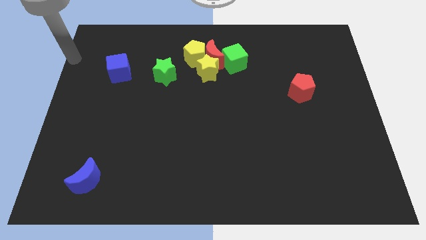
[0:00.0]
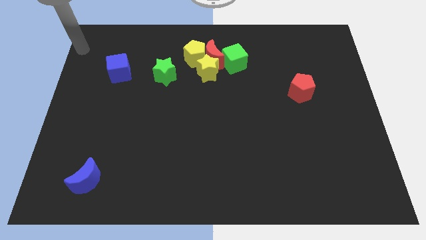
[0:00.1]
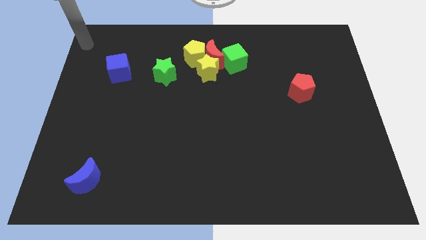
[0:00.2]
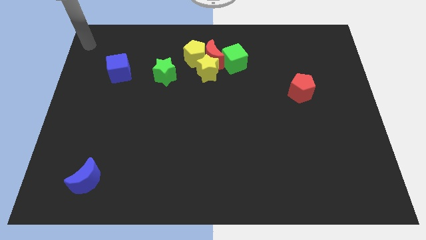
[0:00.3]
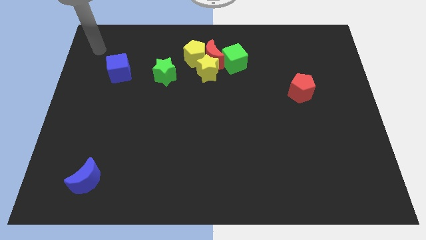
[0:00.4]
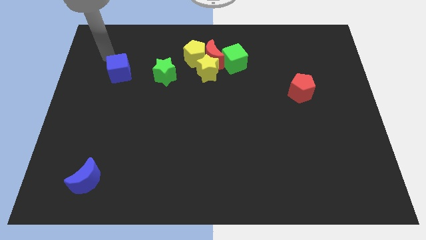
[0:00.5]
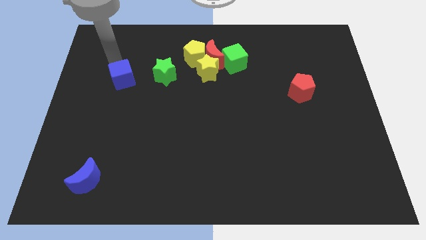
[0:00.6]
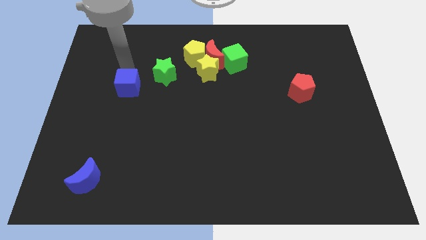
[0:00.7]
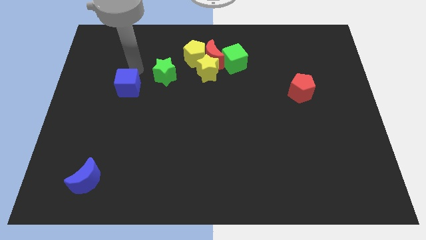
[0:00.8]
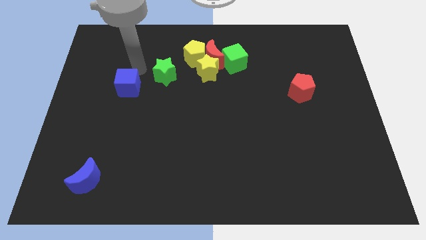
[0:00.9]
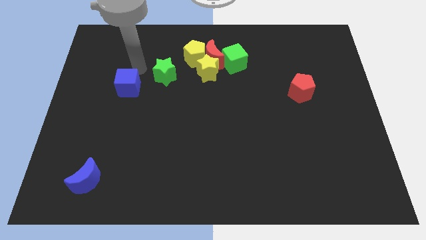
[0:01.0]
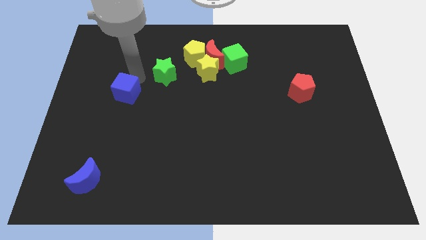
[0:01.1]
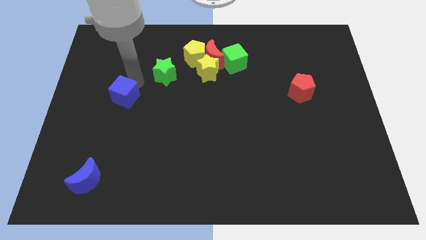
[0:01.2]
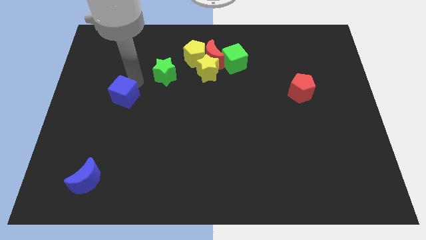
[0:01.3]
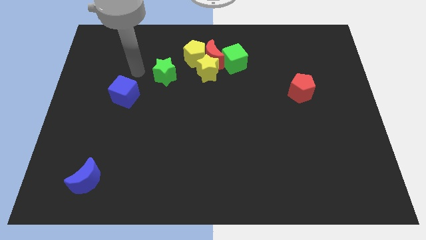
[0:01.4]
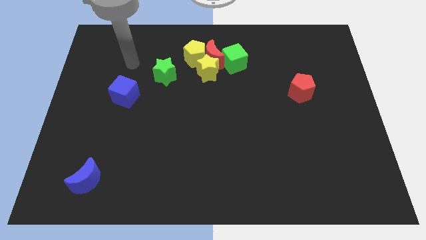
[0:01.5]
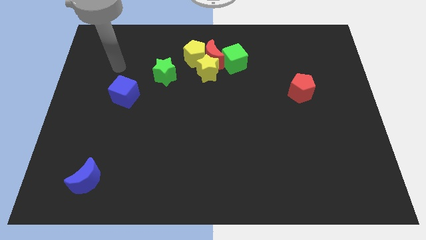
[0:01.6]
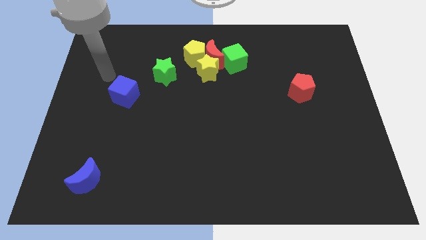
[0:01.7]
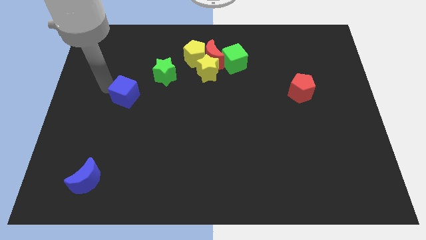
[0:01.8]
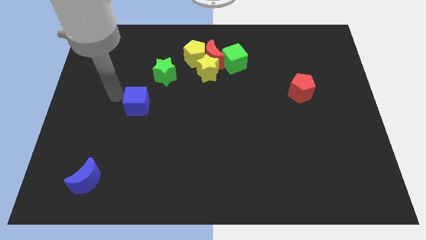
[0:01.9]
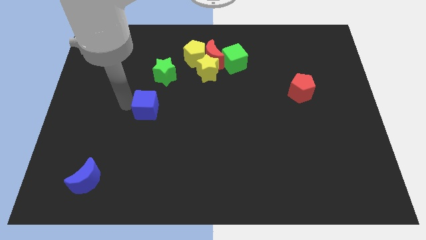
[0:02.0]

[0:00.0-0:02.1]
push blue cube to the bottom left of green star

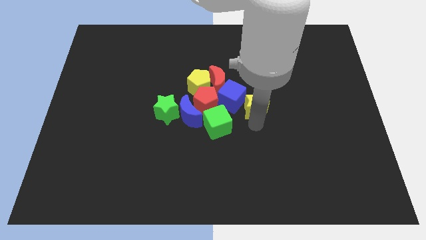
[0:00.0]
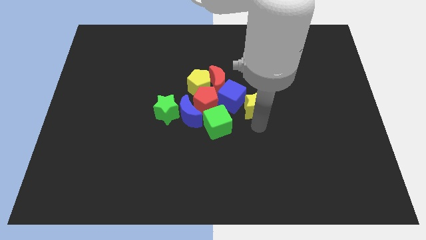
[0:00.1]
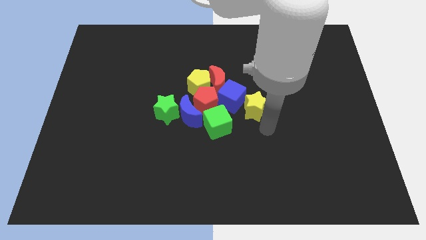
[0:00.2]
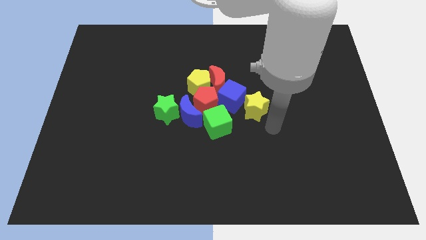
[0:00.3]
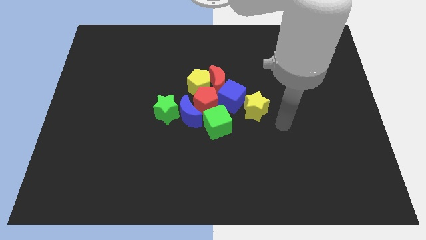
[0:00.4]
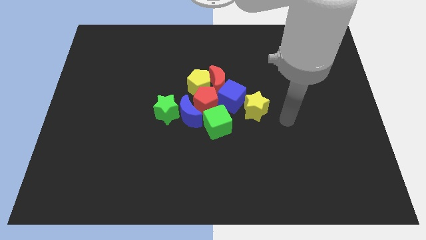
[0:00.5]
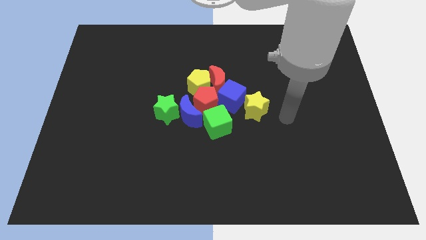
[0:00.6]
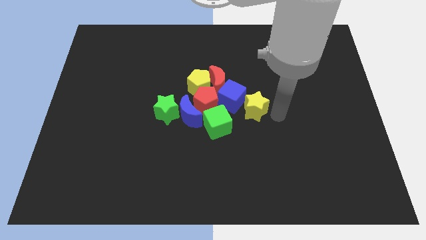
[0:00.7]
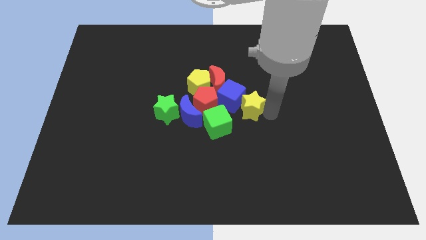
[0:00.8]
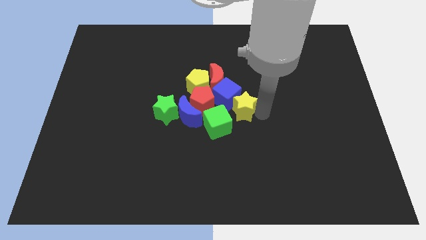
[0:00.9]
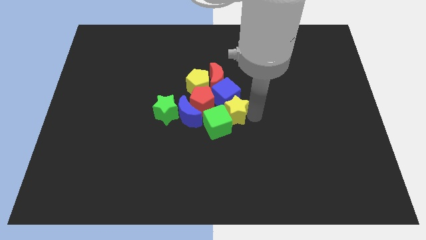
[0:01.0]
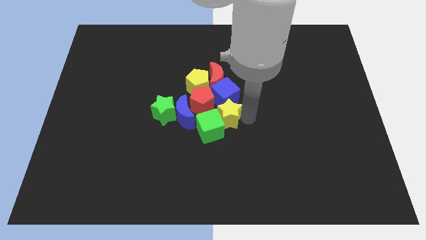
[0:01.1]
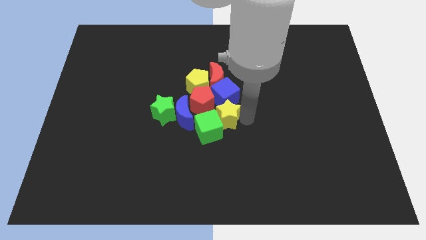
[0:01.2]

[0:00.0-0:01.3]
move the yellow star into the green cube

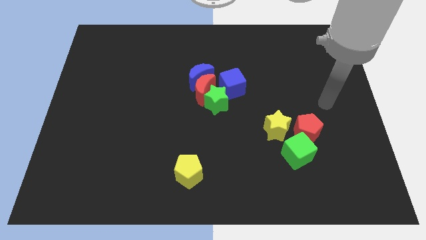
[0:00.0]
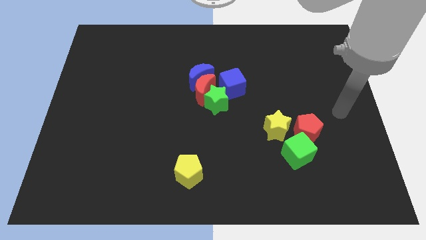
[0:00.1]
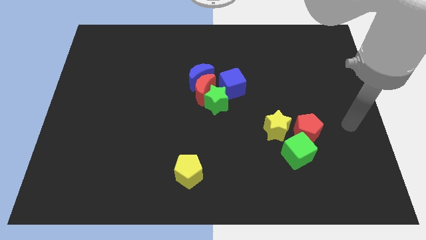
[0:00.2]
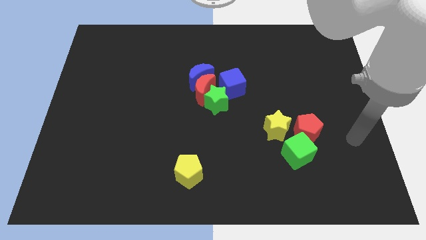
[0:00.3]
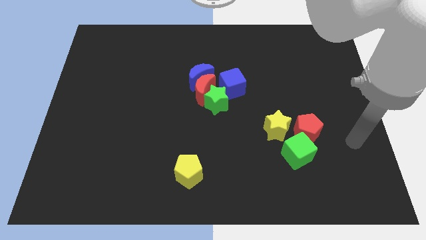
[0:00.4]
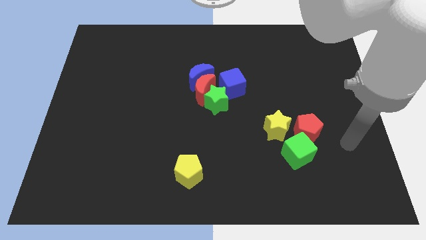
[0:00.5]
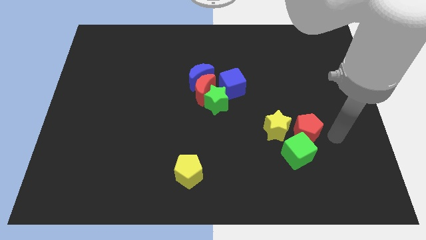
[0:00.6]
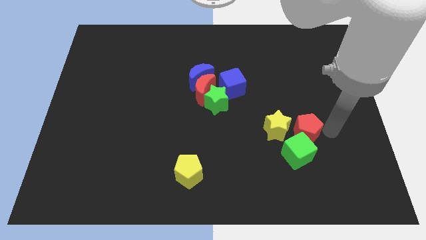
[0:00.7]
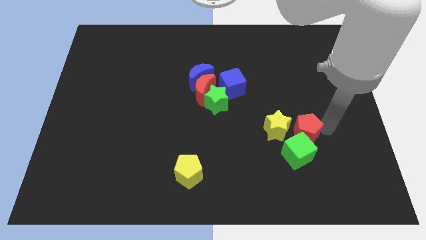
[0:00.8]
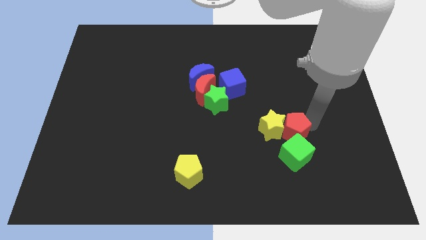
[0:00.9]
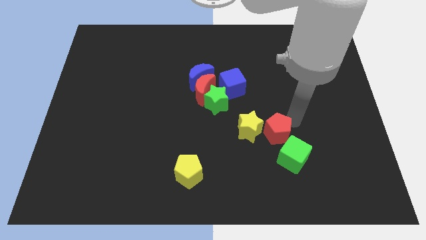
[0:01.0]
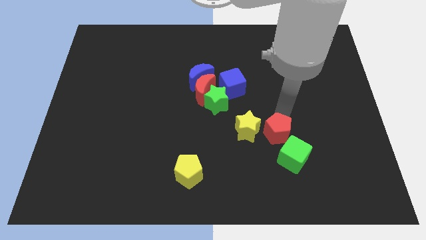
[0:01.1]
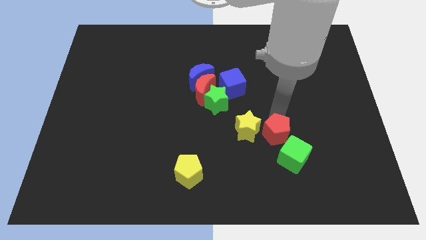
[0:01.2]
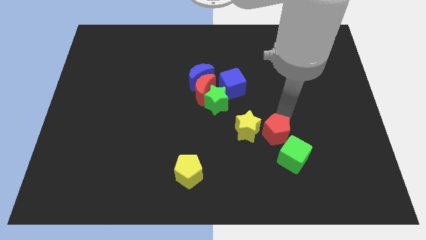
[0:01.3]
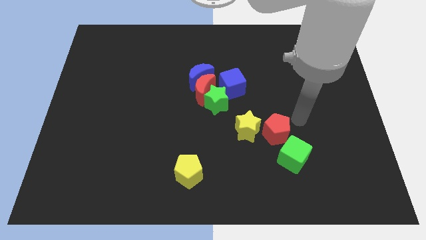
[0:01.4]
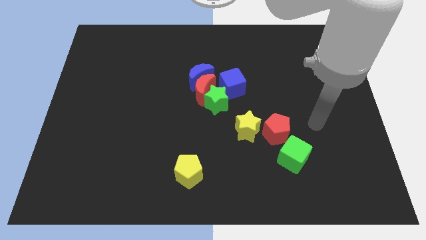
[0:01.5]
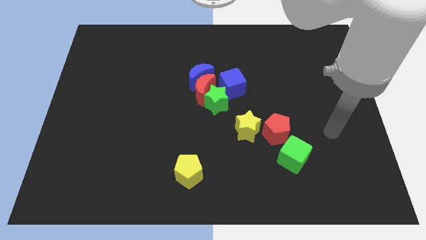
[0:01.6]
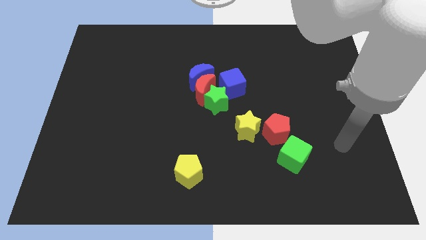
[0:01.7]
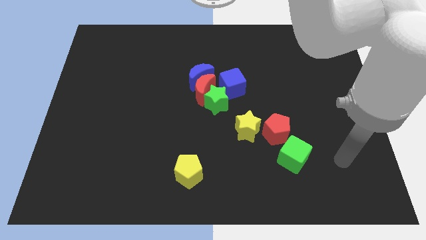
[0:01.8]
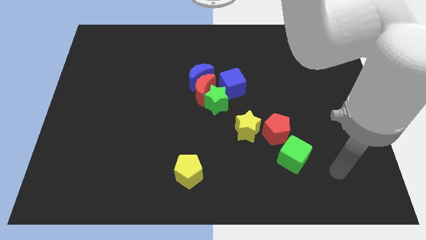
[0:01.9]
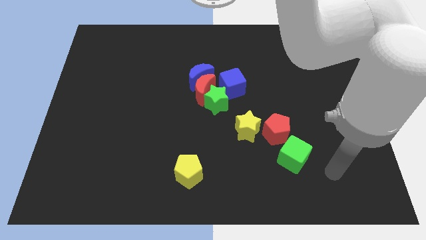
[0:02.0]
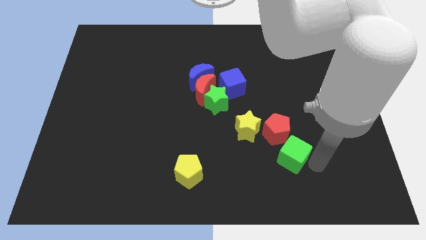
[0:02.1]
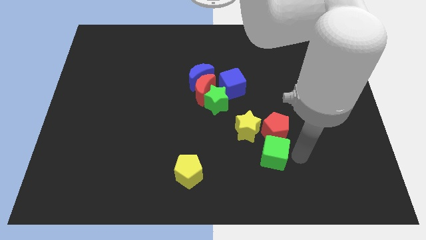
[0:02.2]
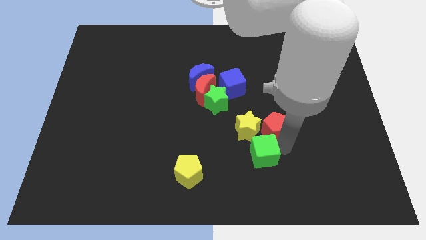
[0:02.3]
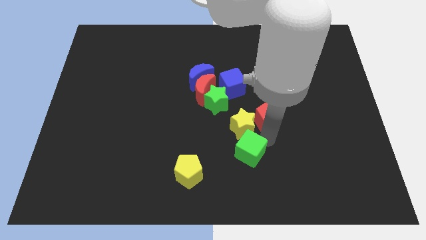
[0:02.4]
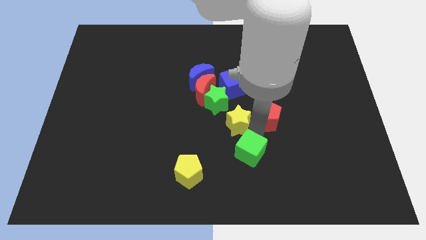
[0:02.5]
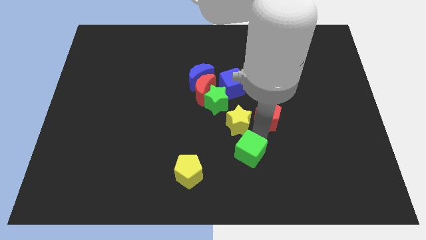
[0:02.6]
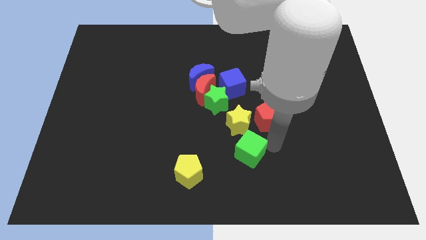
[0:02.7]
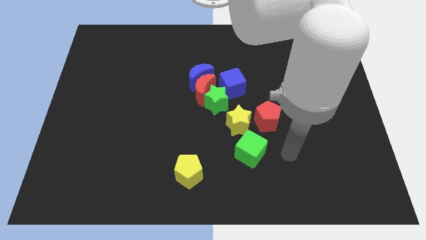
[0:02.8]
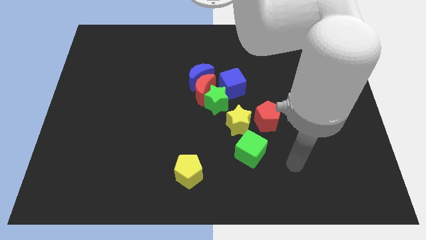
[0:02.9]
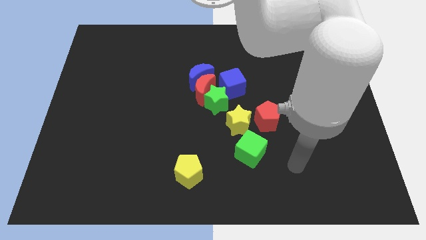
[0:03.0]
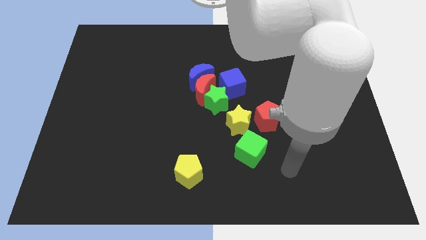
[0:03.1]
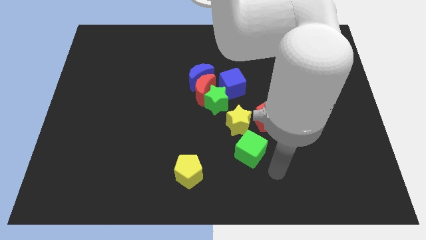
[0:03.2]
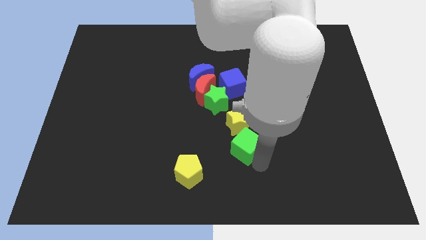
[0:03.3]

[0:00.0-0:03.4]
push yellow star red pentagon and green cube into the group of blocks

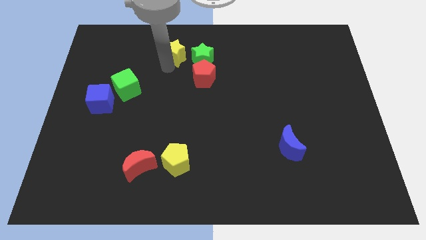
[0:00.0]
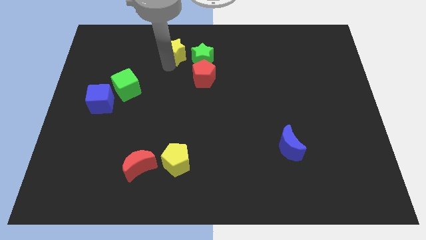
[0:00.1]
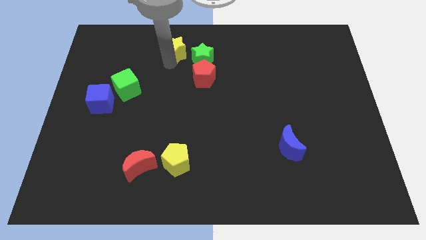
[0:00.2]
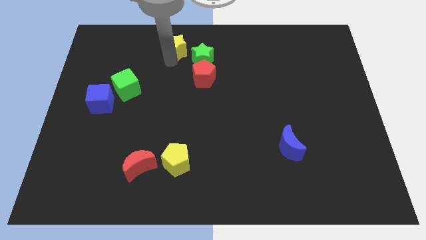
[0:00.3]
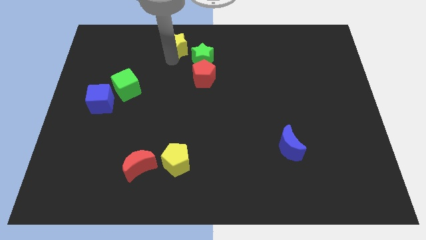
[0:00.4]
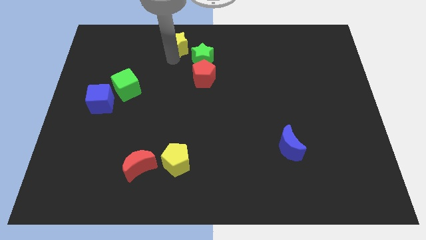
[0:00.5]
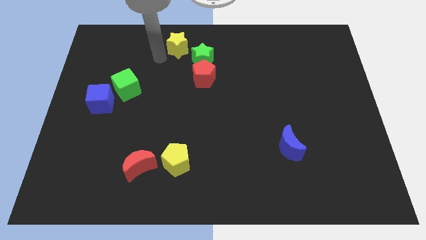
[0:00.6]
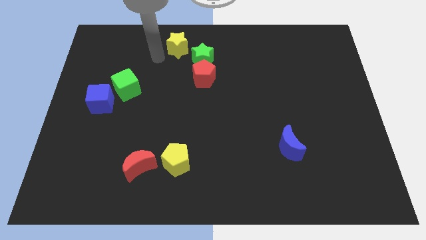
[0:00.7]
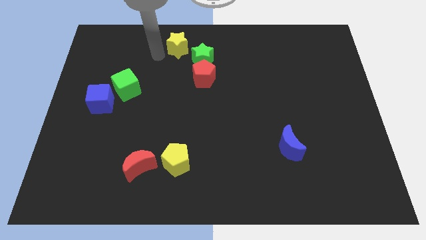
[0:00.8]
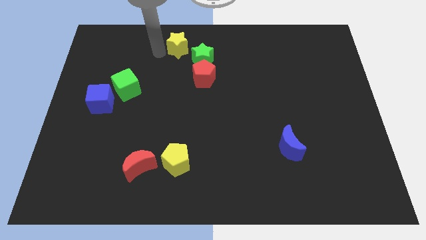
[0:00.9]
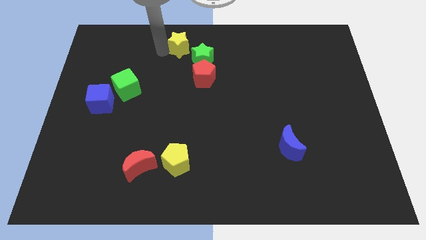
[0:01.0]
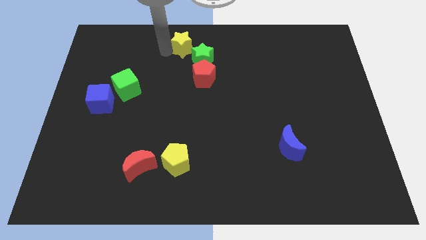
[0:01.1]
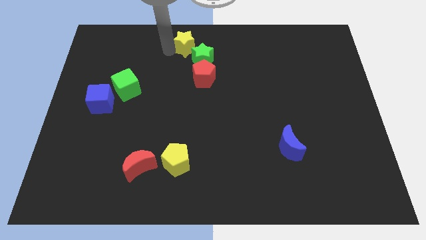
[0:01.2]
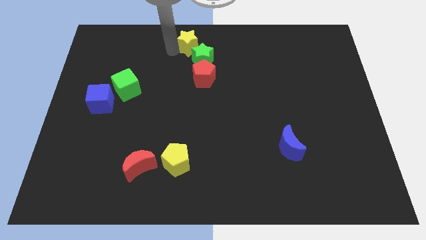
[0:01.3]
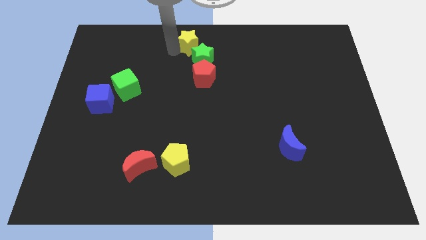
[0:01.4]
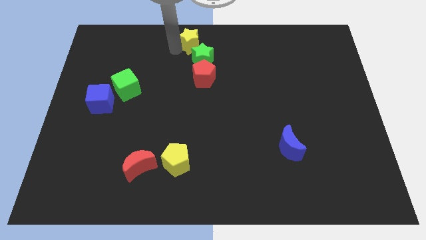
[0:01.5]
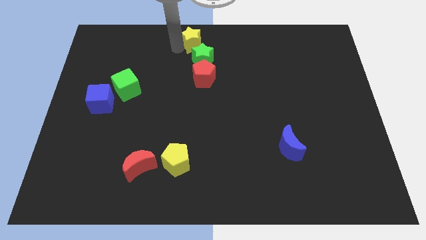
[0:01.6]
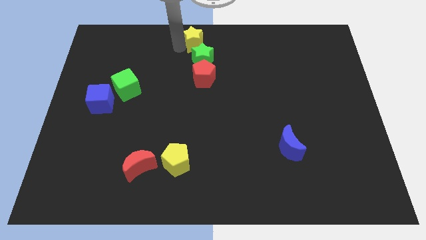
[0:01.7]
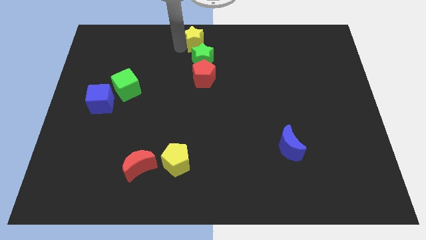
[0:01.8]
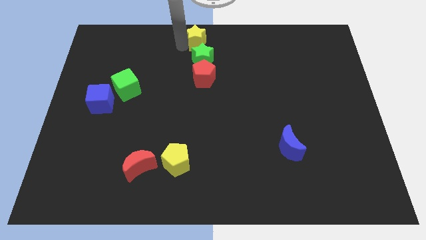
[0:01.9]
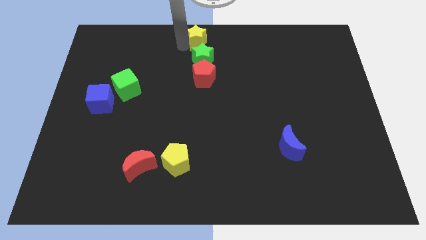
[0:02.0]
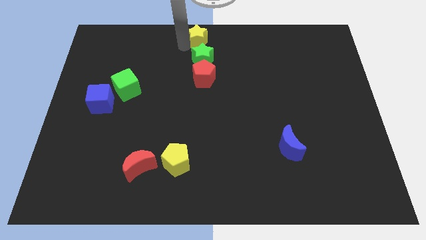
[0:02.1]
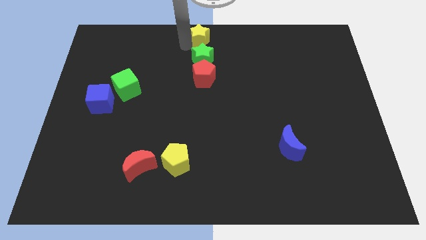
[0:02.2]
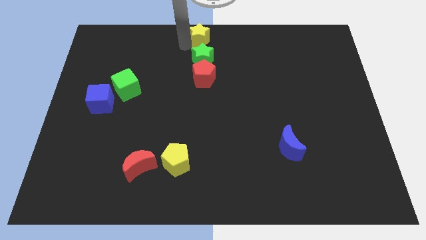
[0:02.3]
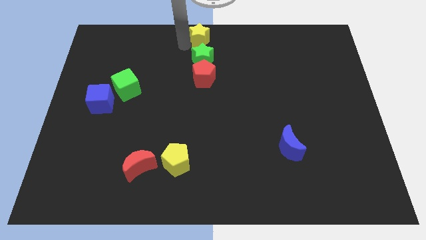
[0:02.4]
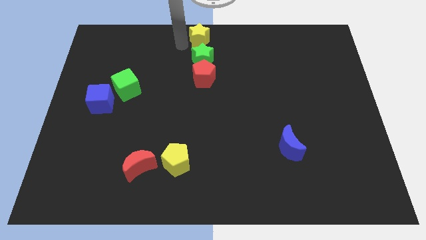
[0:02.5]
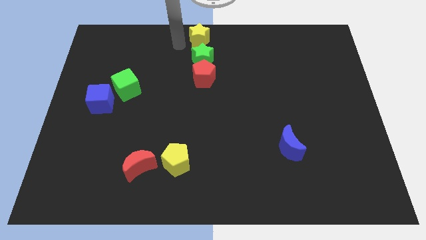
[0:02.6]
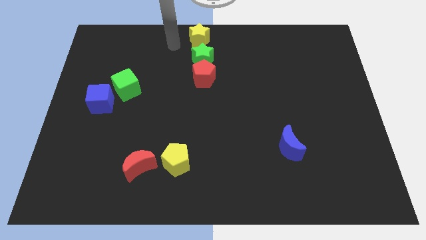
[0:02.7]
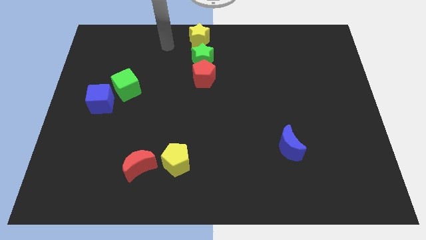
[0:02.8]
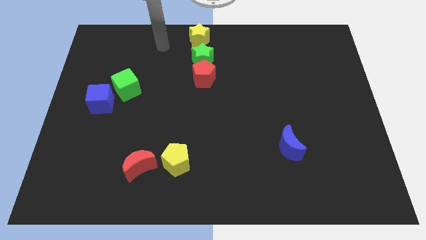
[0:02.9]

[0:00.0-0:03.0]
drag the yellow star and place it above the green star
